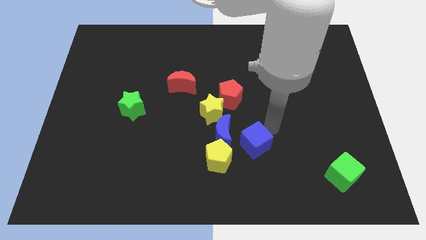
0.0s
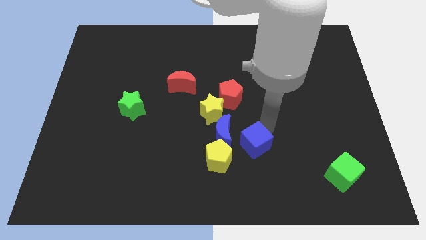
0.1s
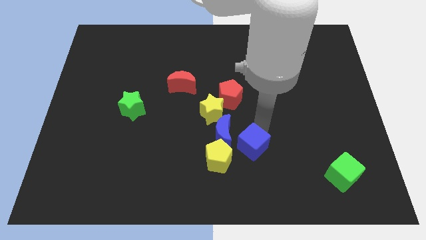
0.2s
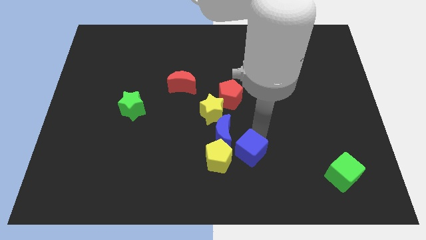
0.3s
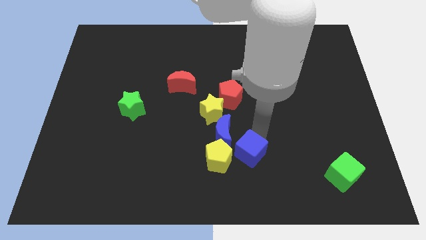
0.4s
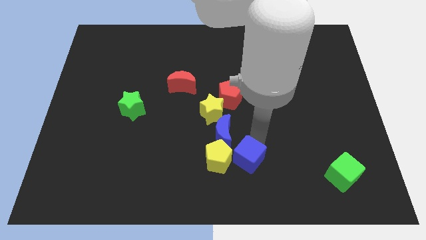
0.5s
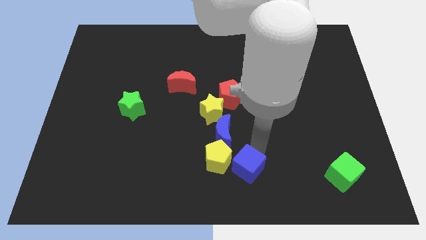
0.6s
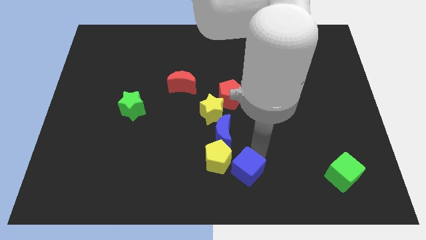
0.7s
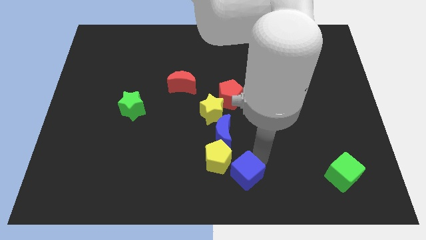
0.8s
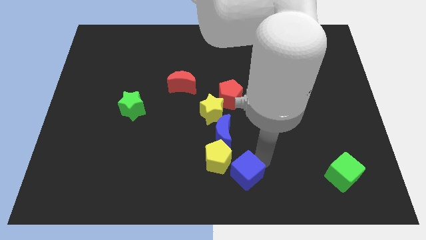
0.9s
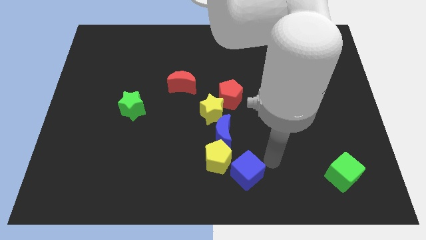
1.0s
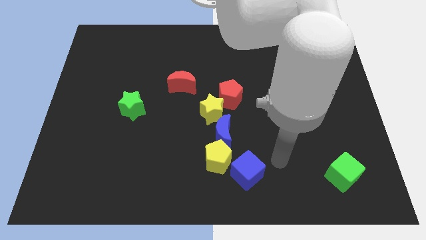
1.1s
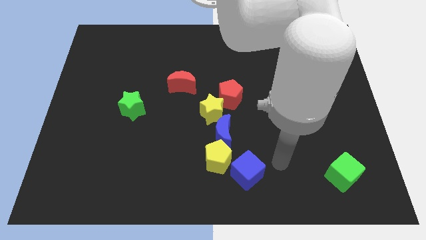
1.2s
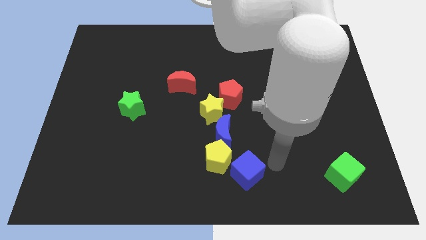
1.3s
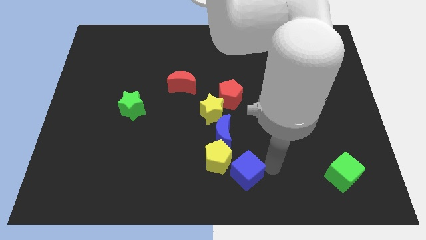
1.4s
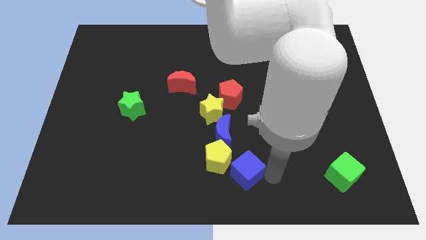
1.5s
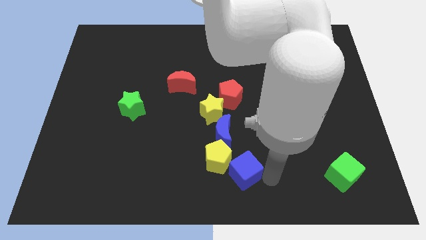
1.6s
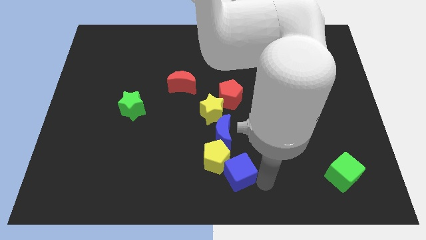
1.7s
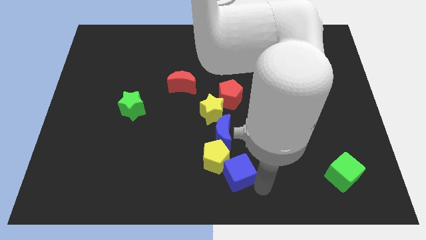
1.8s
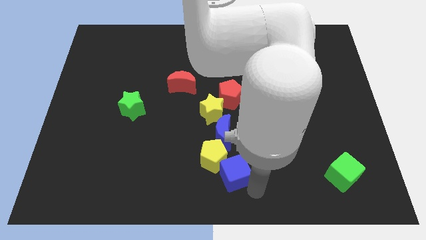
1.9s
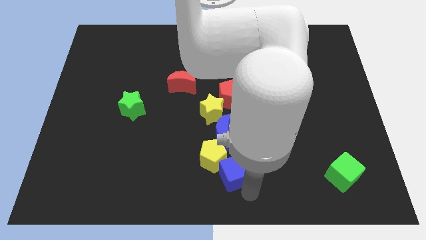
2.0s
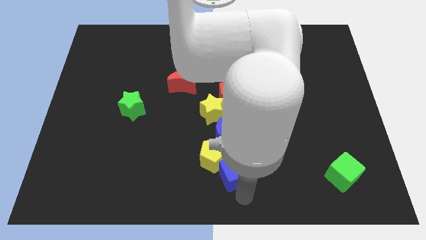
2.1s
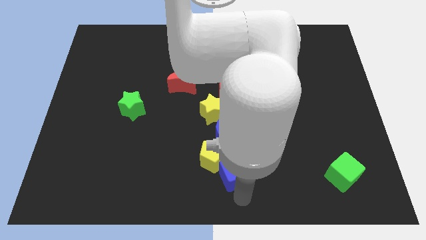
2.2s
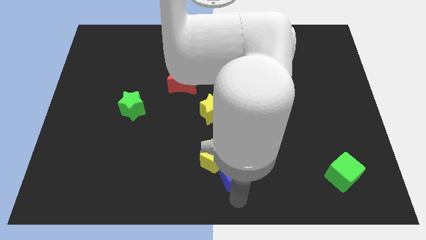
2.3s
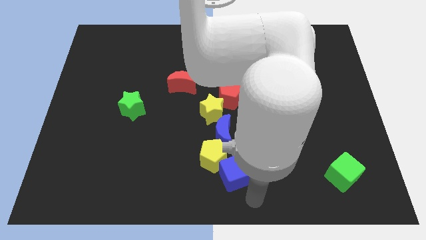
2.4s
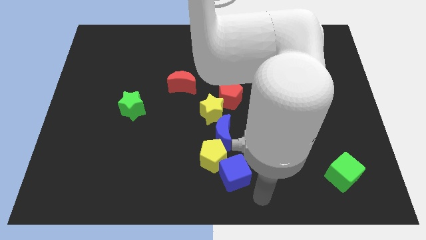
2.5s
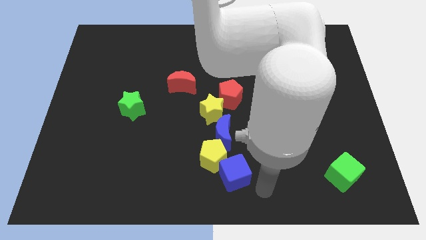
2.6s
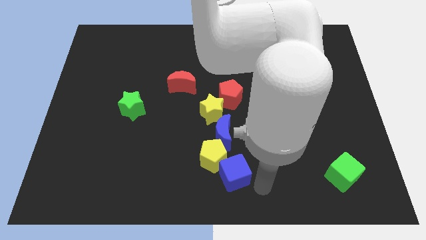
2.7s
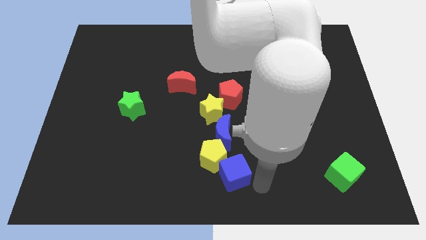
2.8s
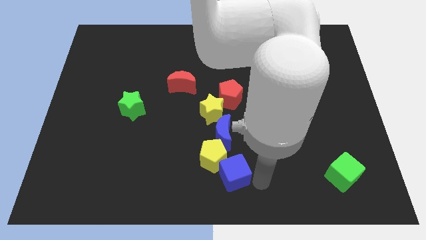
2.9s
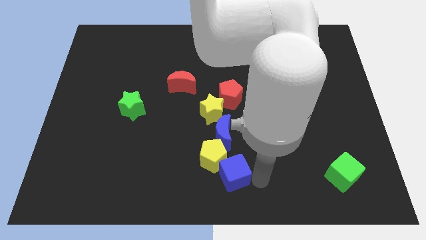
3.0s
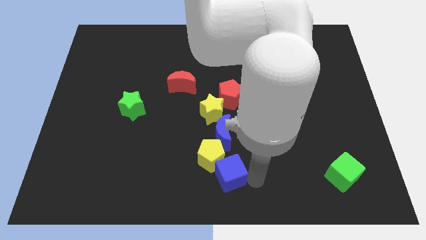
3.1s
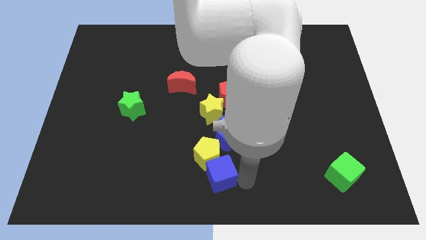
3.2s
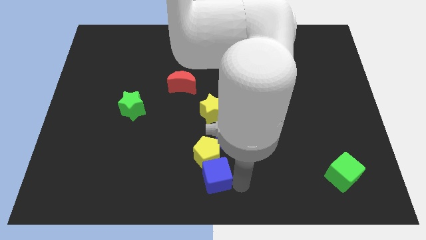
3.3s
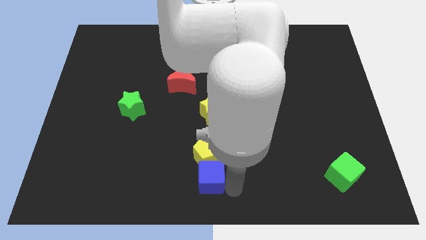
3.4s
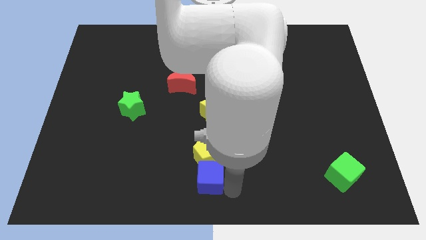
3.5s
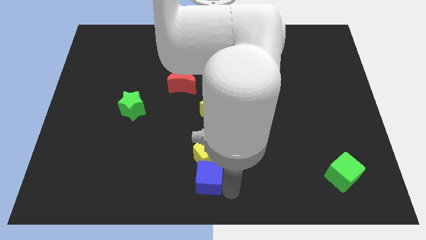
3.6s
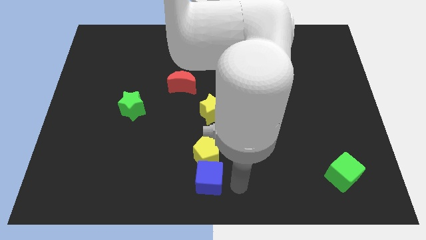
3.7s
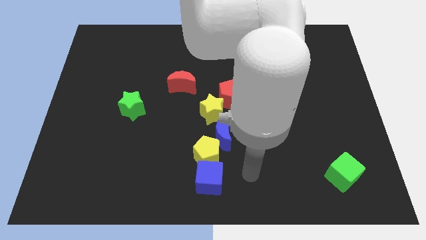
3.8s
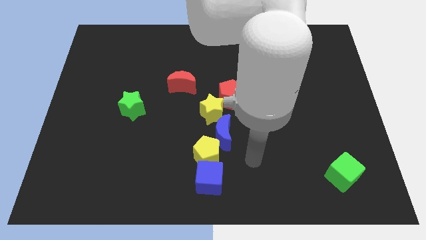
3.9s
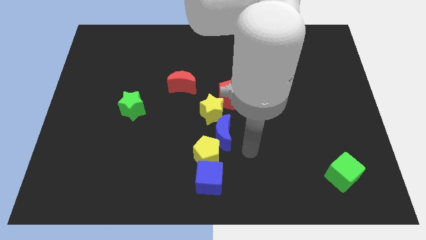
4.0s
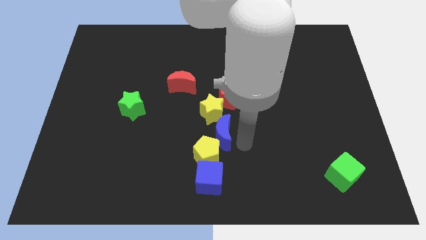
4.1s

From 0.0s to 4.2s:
place blue cube below yellow pentagon

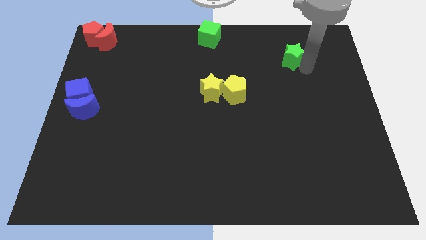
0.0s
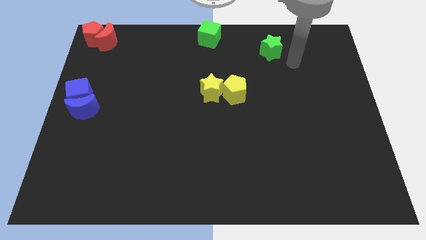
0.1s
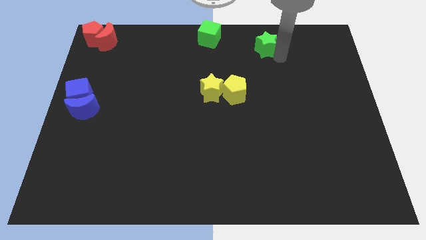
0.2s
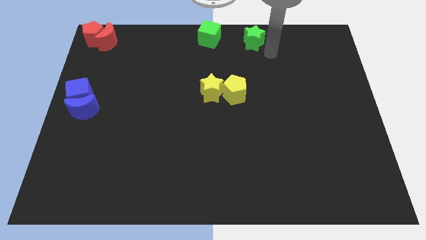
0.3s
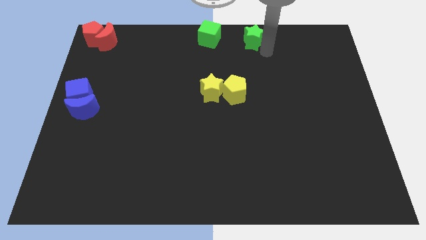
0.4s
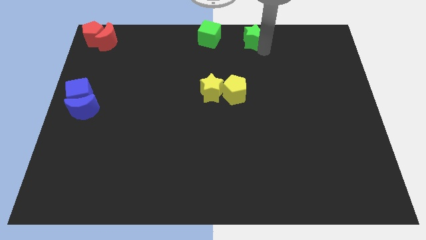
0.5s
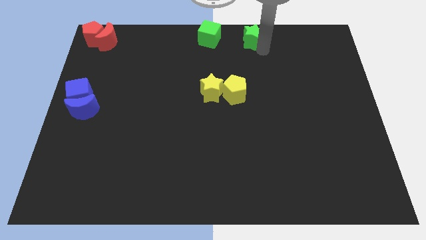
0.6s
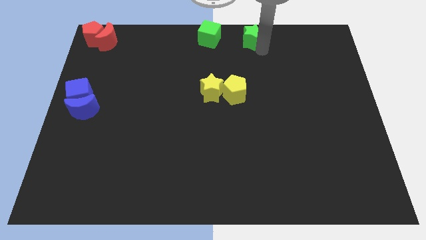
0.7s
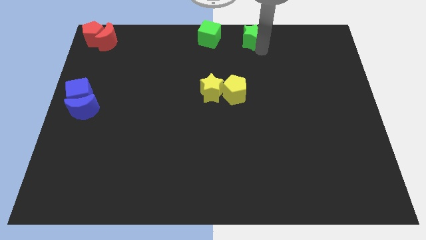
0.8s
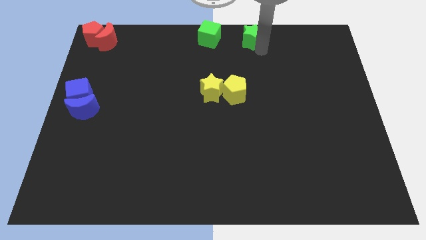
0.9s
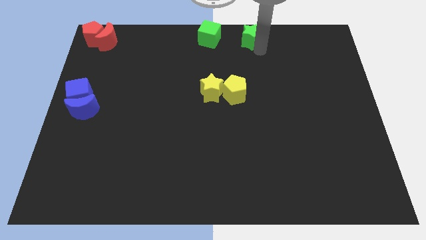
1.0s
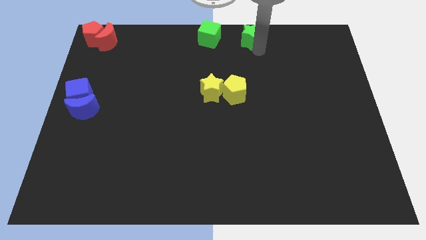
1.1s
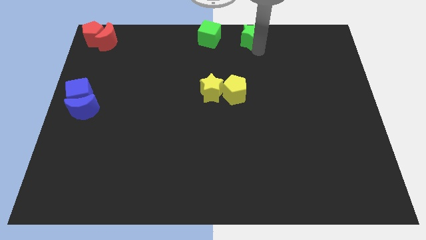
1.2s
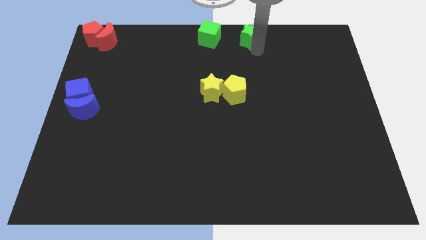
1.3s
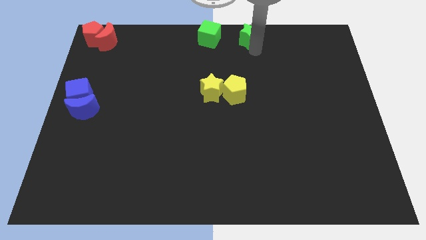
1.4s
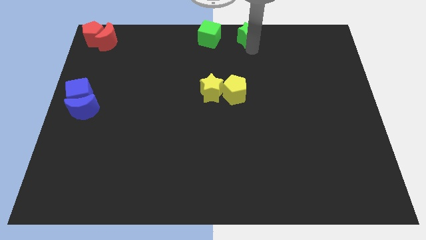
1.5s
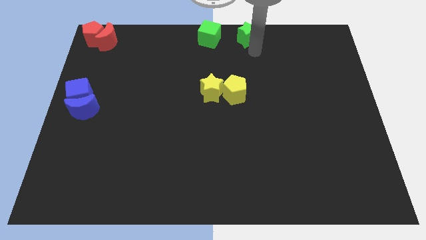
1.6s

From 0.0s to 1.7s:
push the green star towards the right of green cube

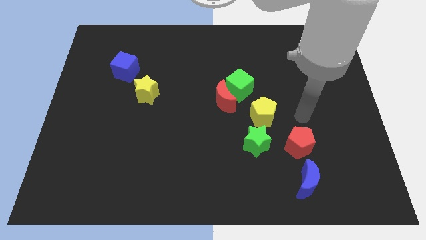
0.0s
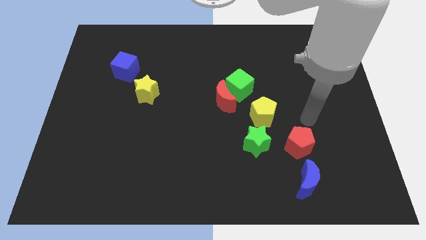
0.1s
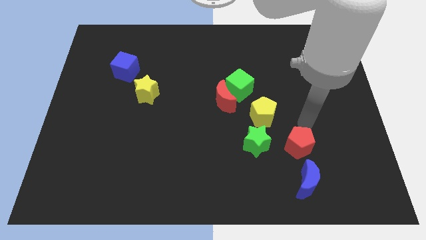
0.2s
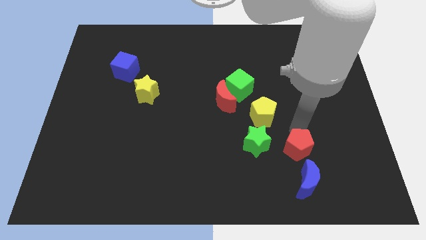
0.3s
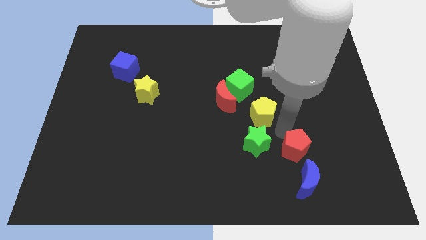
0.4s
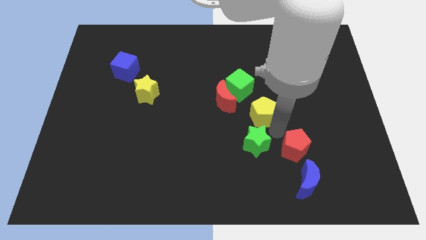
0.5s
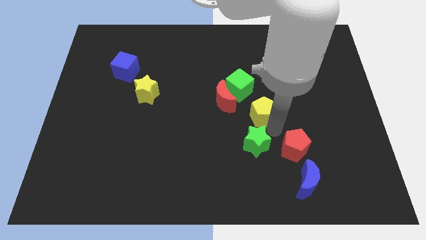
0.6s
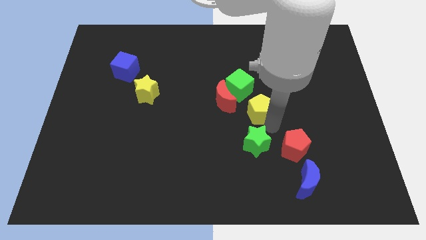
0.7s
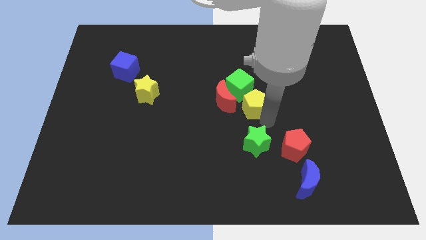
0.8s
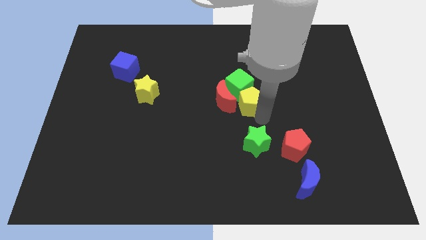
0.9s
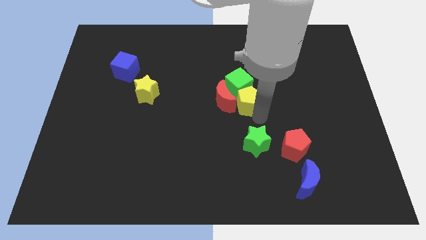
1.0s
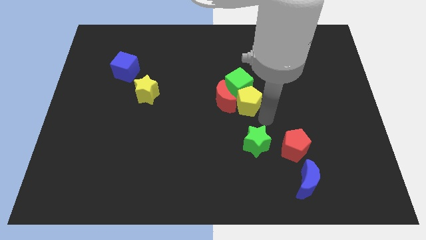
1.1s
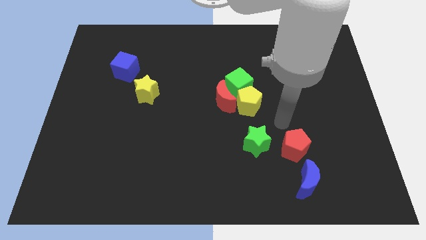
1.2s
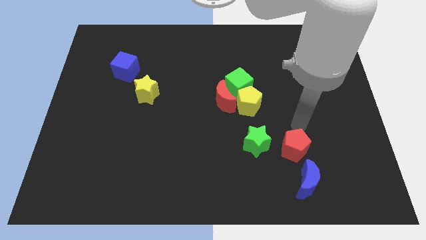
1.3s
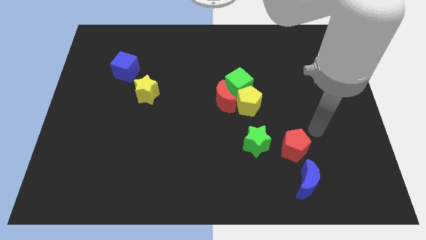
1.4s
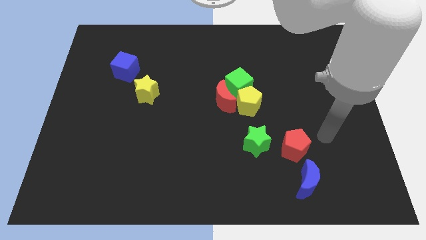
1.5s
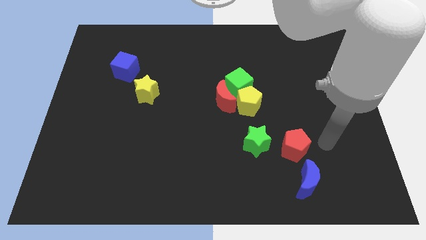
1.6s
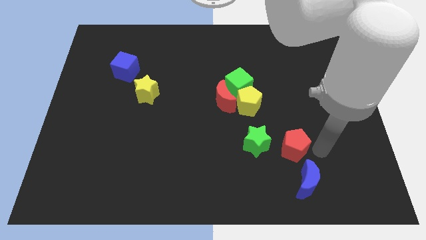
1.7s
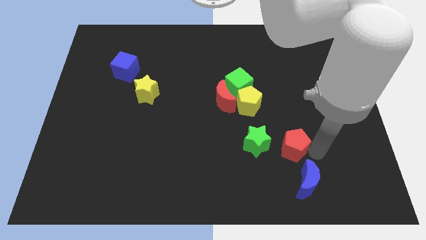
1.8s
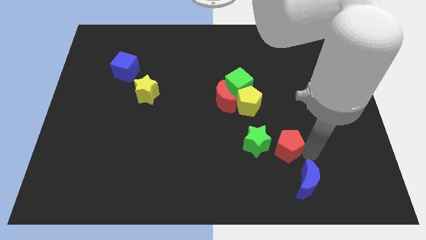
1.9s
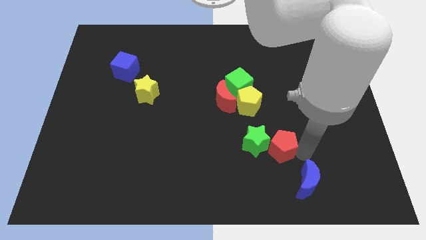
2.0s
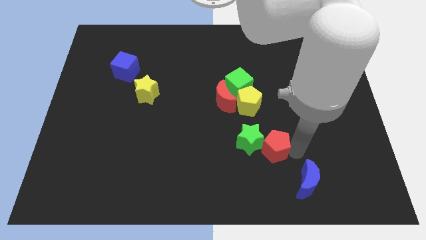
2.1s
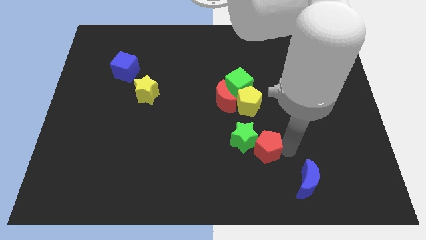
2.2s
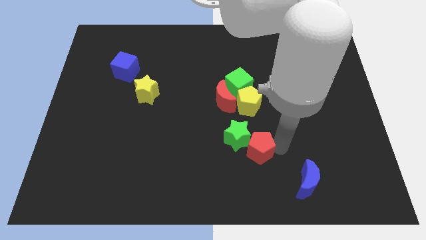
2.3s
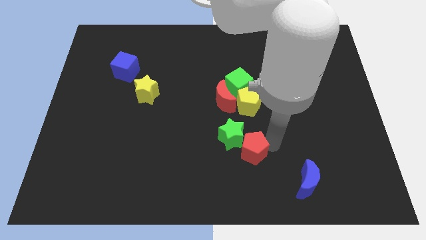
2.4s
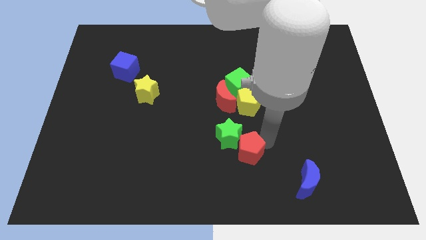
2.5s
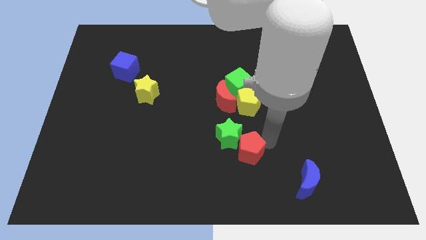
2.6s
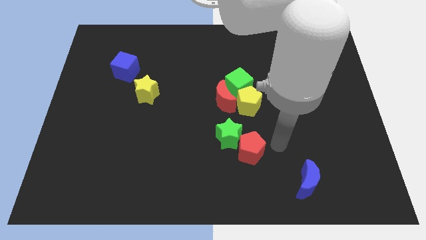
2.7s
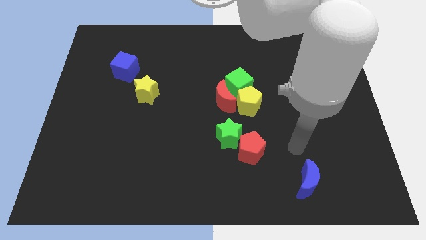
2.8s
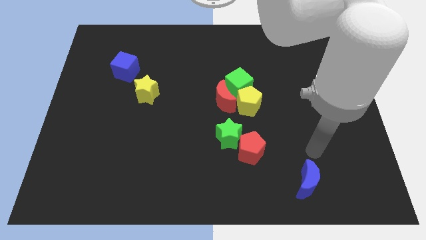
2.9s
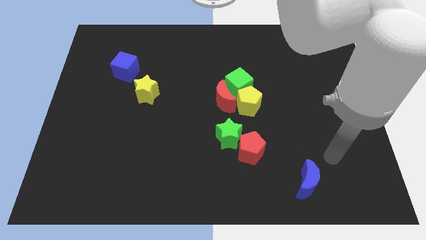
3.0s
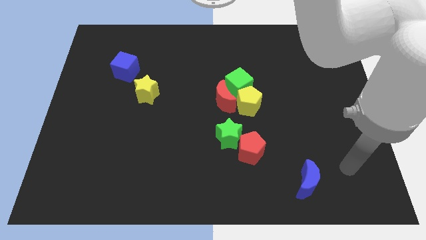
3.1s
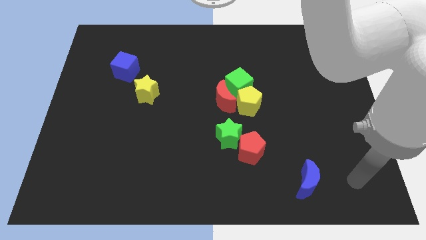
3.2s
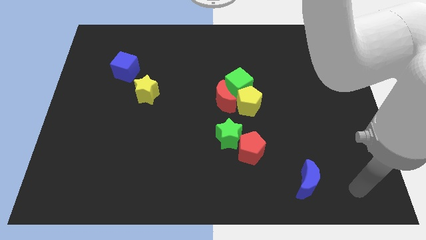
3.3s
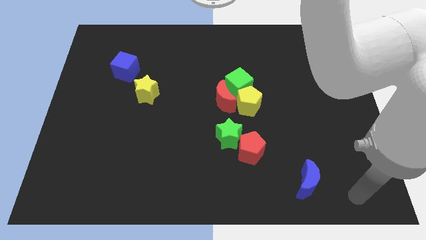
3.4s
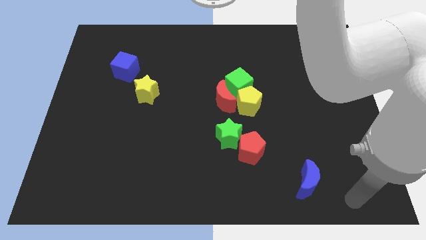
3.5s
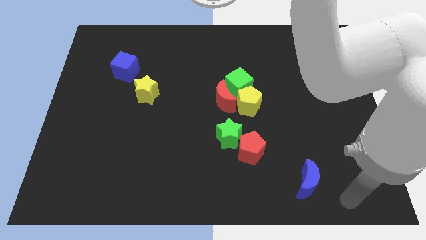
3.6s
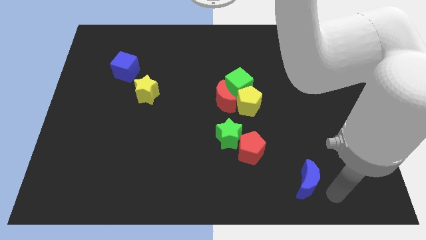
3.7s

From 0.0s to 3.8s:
push the red pentagon into green star
